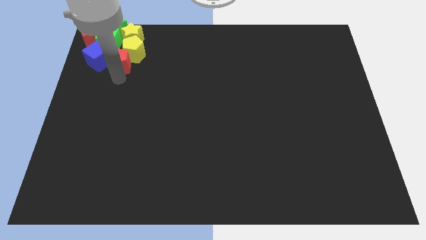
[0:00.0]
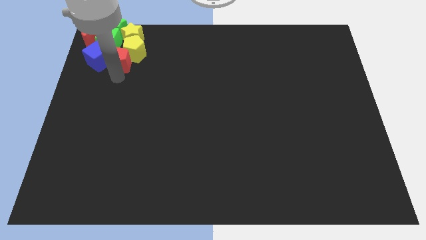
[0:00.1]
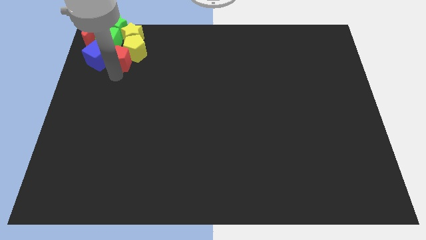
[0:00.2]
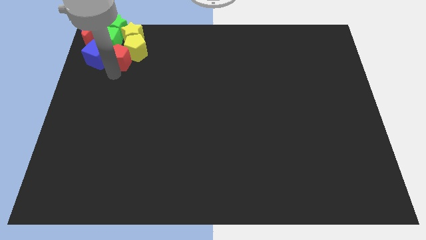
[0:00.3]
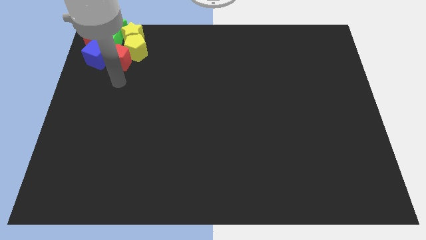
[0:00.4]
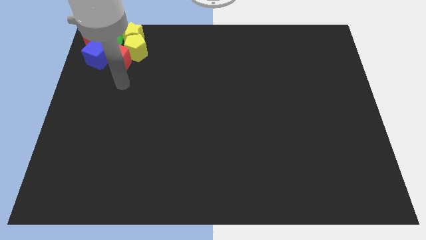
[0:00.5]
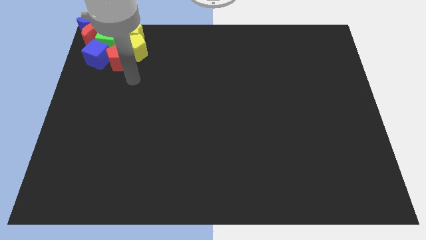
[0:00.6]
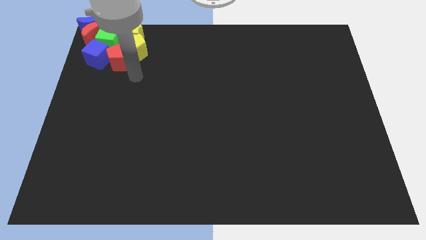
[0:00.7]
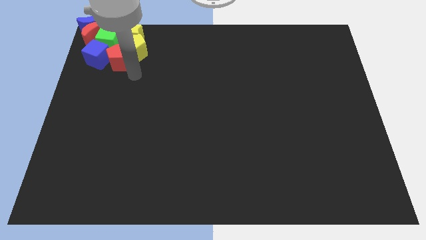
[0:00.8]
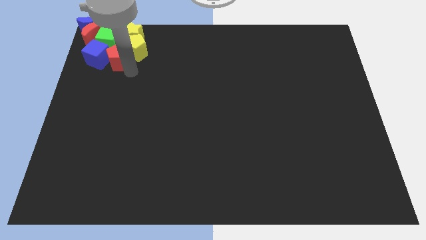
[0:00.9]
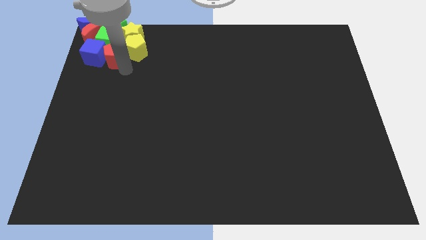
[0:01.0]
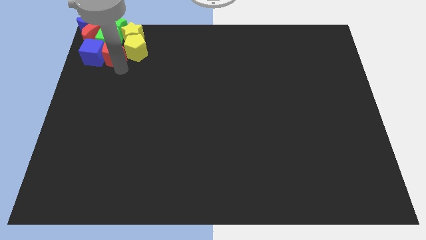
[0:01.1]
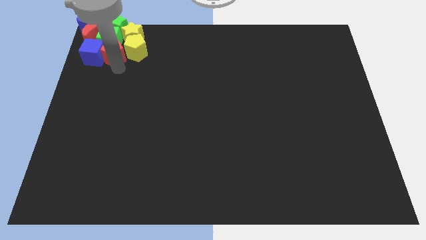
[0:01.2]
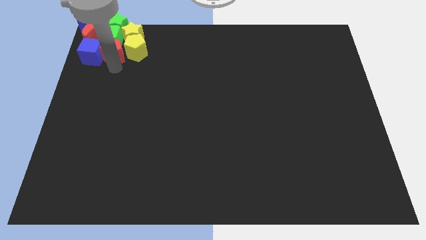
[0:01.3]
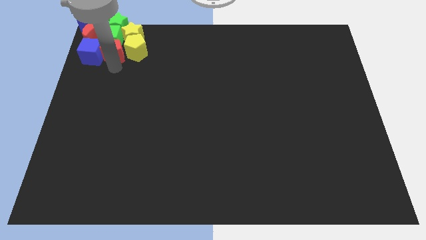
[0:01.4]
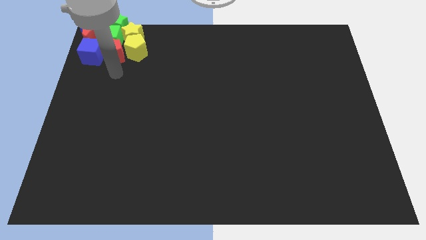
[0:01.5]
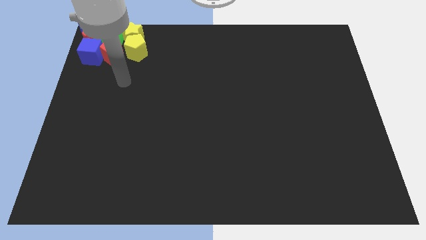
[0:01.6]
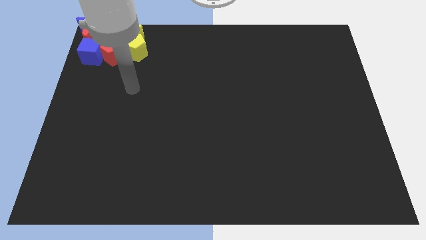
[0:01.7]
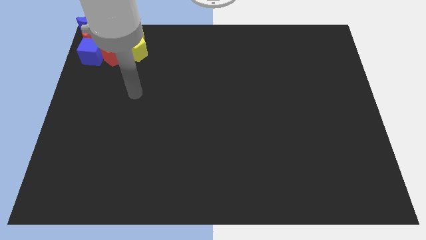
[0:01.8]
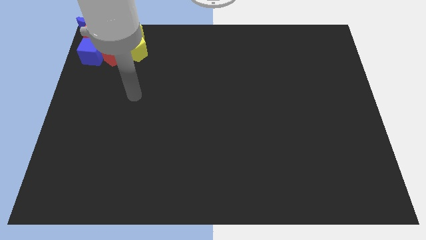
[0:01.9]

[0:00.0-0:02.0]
slide the red pentagon to the bottom of the green cube

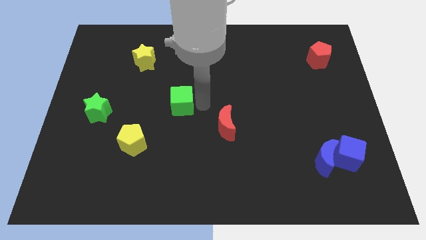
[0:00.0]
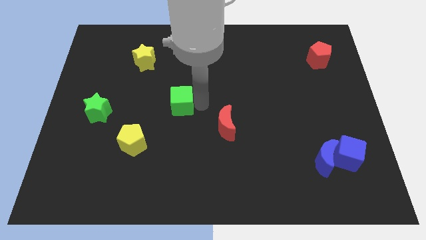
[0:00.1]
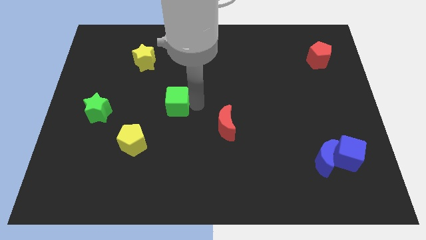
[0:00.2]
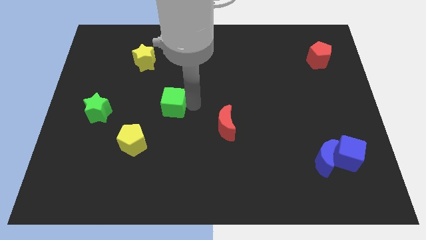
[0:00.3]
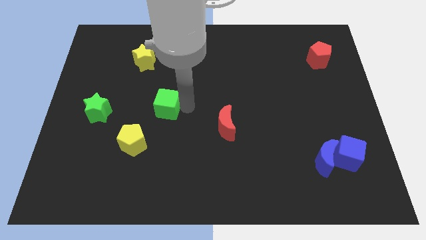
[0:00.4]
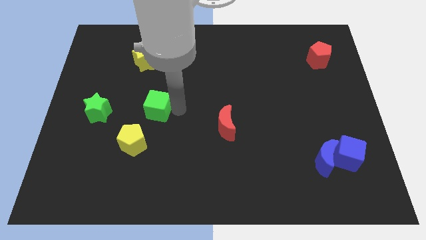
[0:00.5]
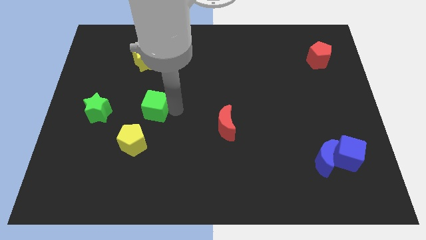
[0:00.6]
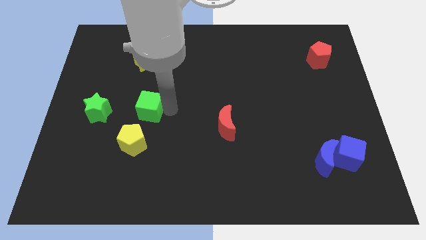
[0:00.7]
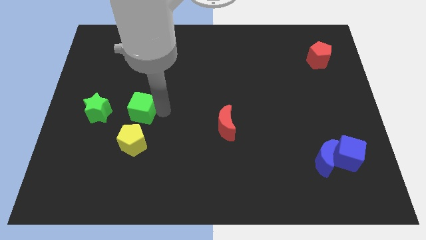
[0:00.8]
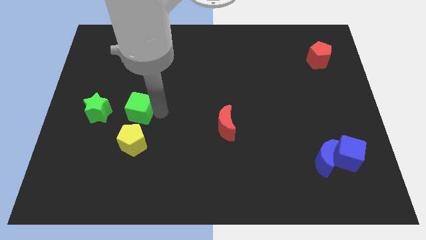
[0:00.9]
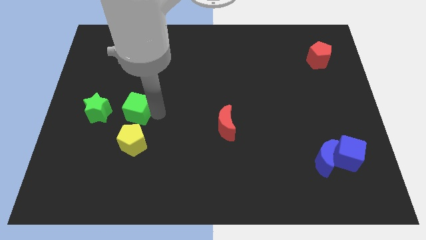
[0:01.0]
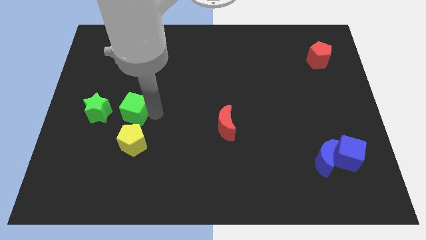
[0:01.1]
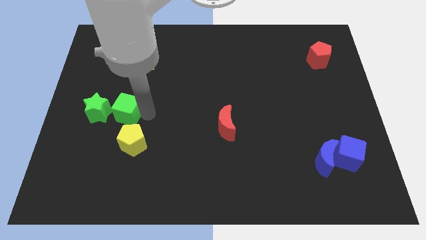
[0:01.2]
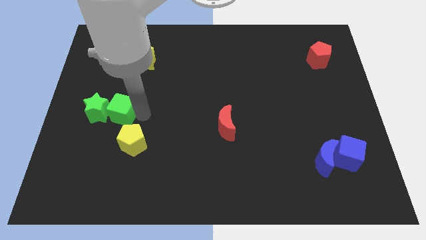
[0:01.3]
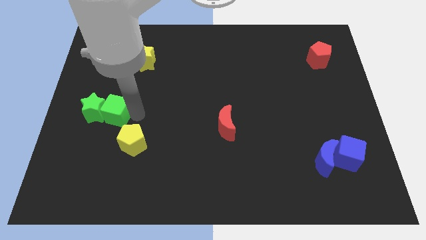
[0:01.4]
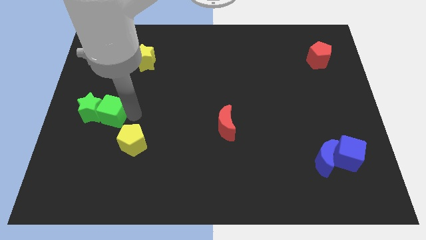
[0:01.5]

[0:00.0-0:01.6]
move the green cube close to the green star

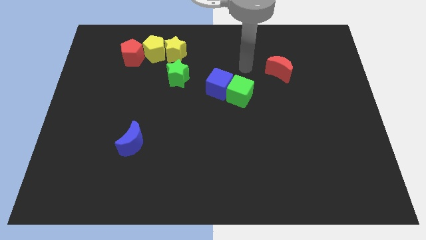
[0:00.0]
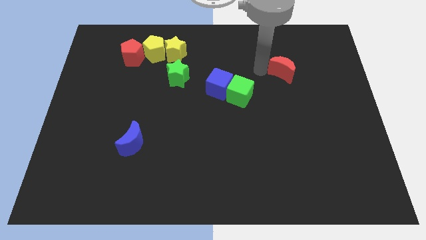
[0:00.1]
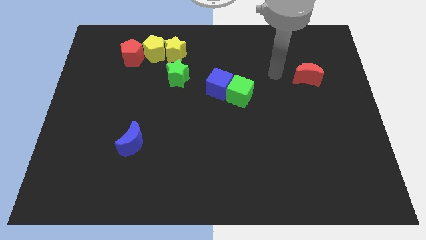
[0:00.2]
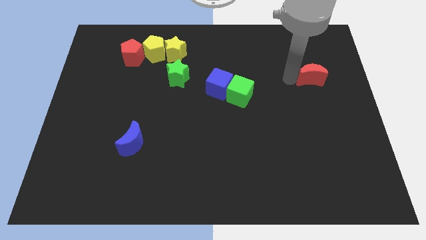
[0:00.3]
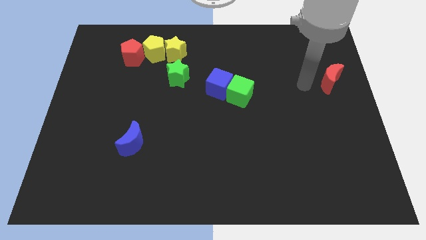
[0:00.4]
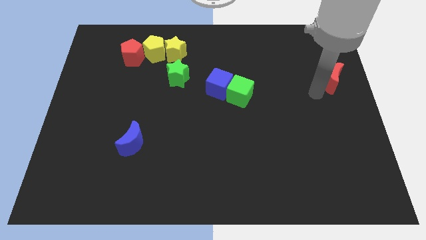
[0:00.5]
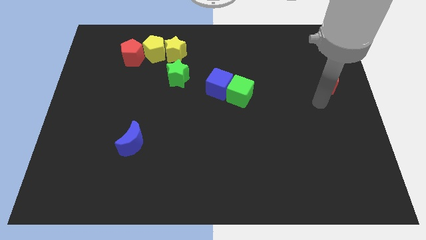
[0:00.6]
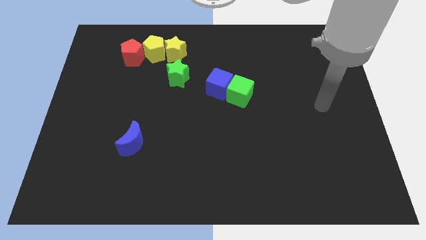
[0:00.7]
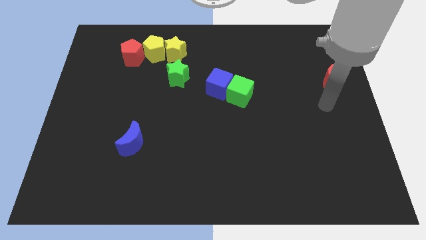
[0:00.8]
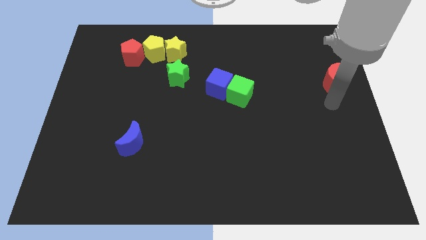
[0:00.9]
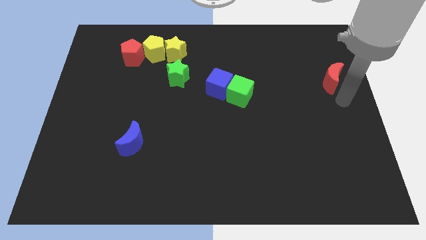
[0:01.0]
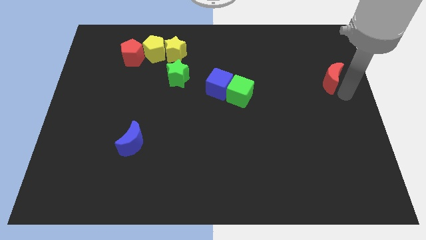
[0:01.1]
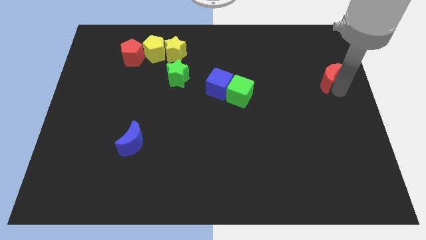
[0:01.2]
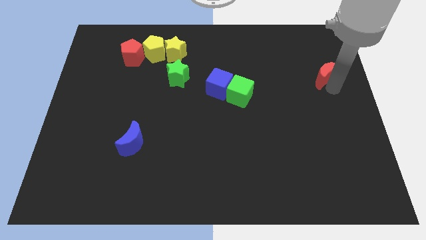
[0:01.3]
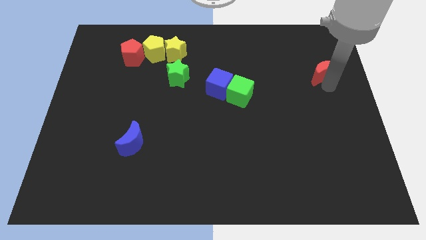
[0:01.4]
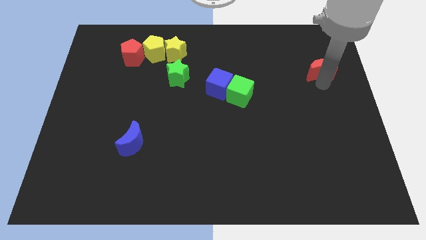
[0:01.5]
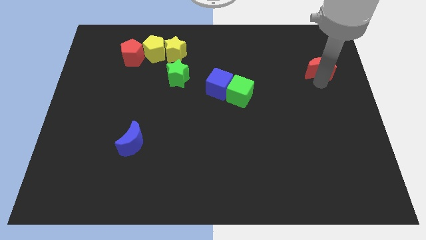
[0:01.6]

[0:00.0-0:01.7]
move the arm towards the red crescent

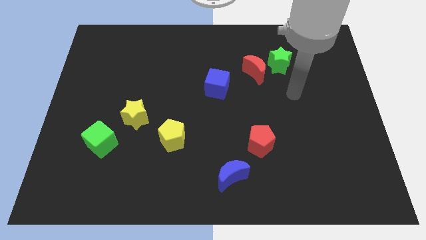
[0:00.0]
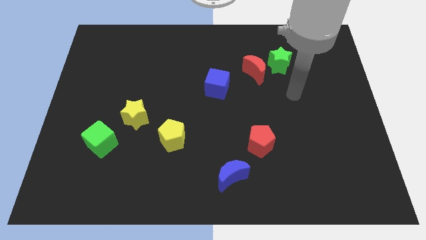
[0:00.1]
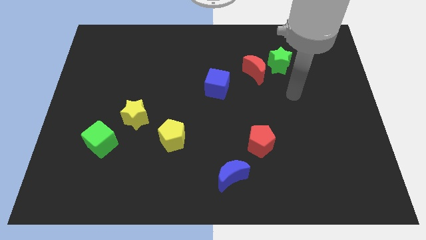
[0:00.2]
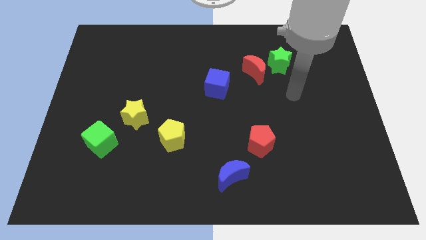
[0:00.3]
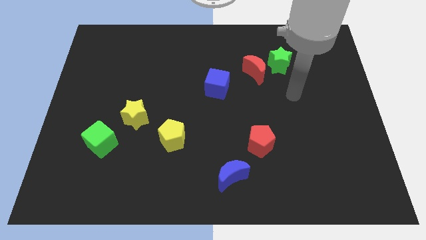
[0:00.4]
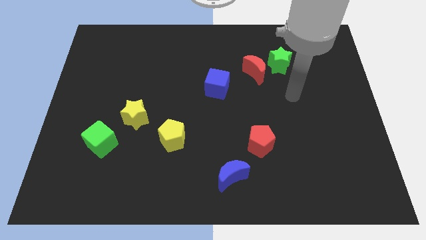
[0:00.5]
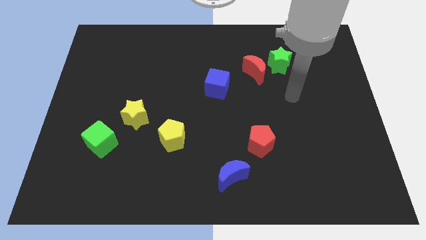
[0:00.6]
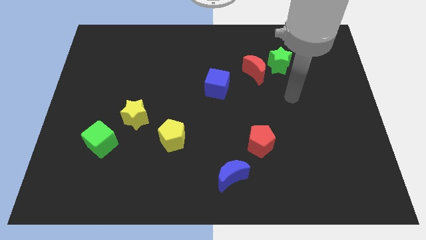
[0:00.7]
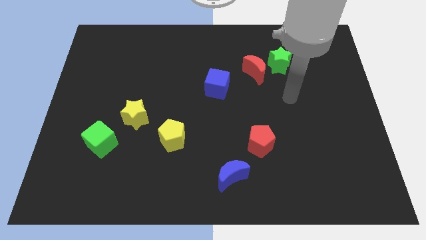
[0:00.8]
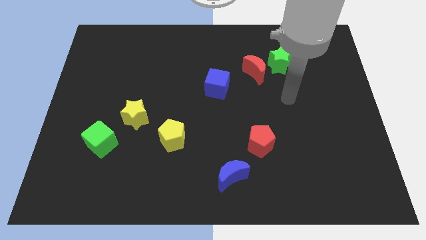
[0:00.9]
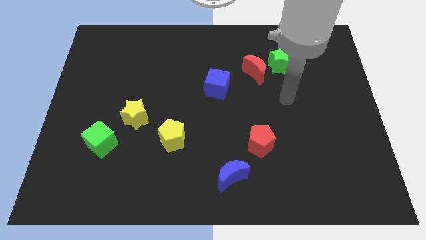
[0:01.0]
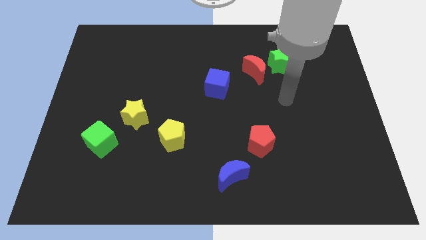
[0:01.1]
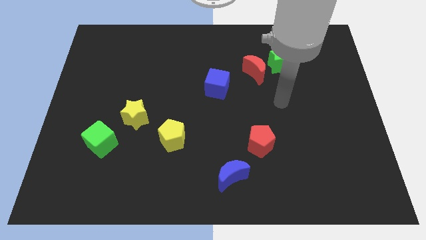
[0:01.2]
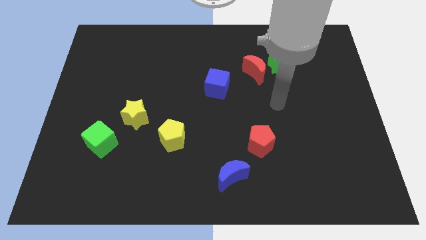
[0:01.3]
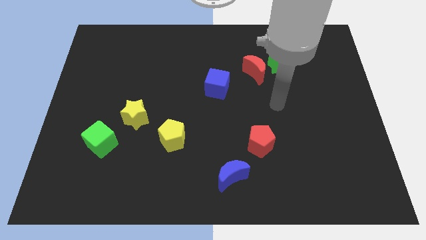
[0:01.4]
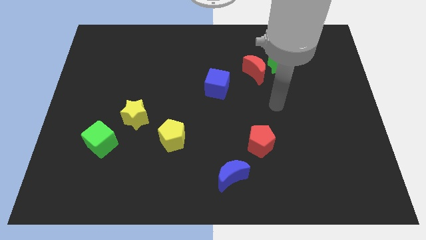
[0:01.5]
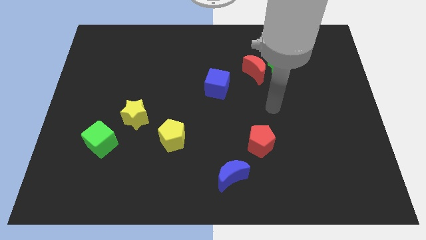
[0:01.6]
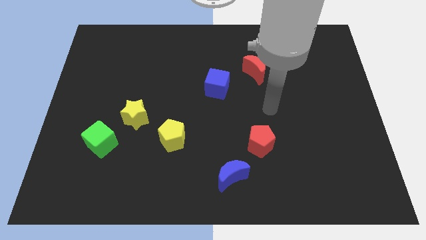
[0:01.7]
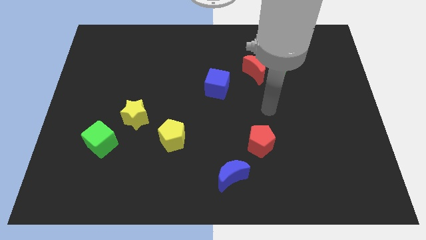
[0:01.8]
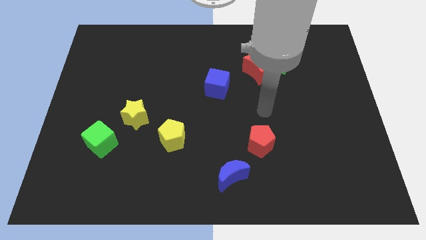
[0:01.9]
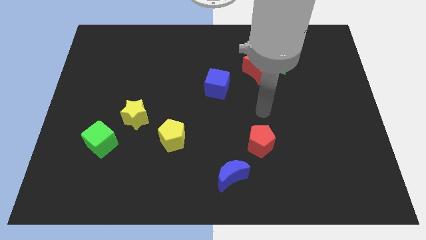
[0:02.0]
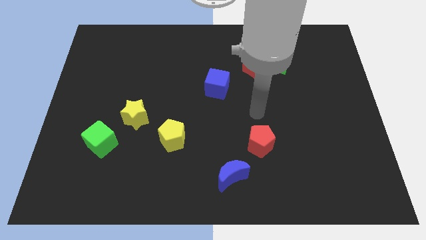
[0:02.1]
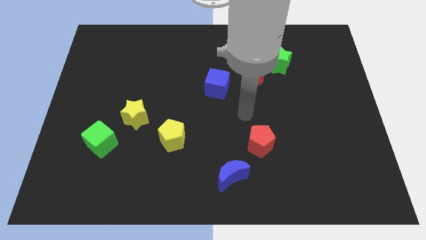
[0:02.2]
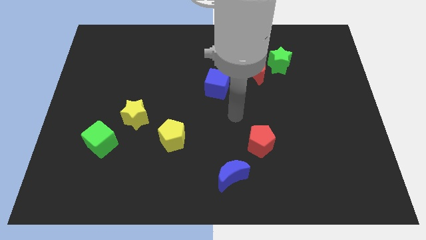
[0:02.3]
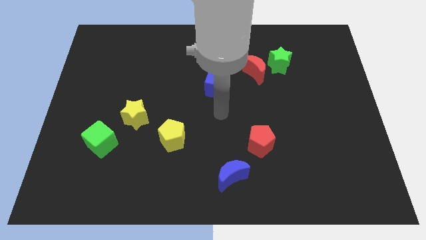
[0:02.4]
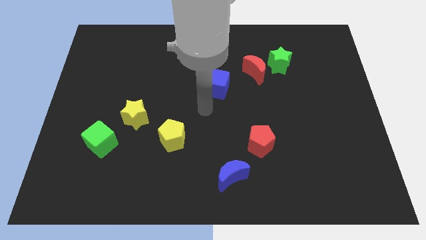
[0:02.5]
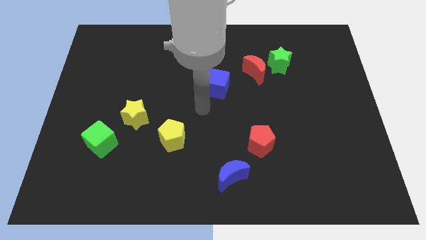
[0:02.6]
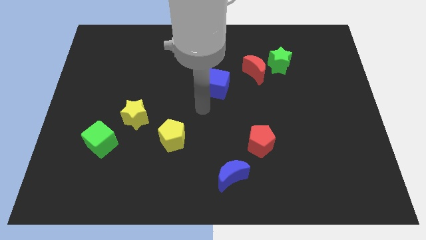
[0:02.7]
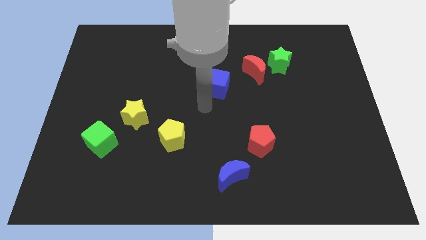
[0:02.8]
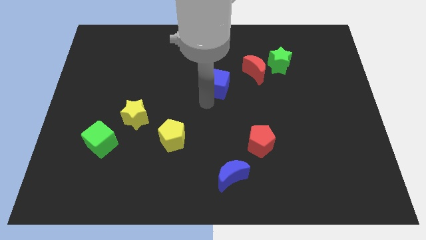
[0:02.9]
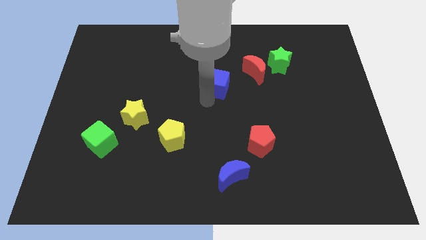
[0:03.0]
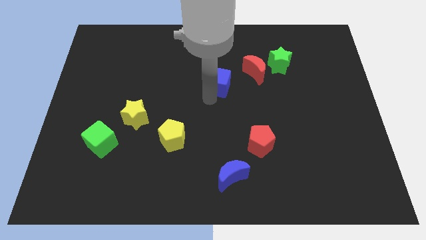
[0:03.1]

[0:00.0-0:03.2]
place the hand at the bottom of the blue cube

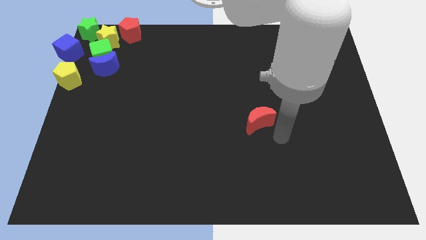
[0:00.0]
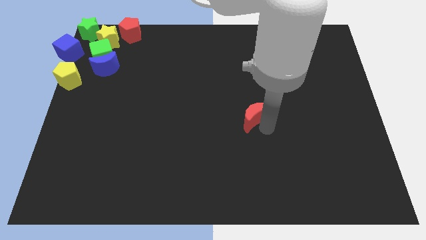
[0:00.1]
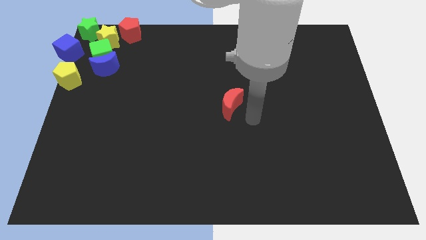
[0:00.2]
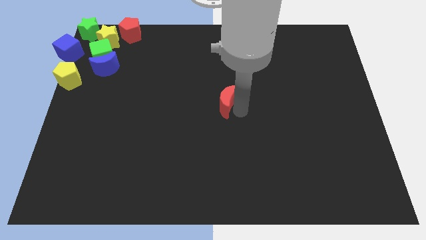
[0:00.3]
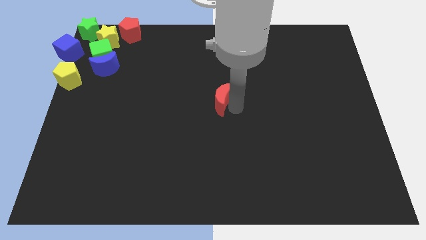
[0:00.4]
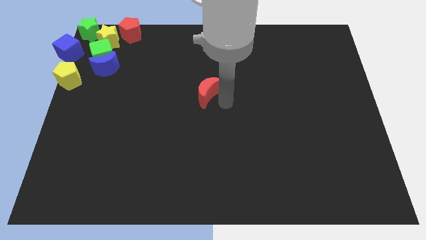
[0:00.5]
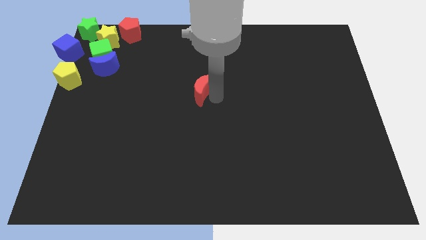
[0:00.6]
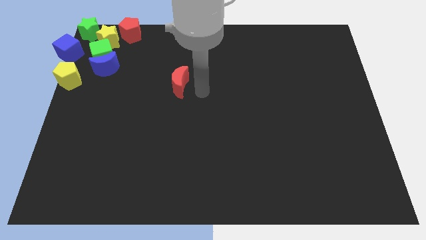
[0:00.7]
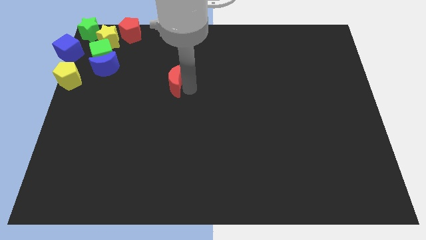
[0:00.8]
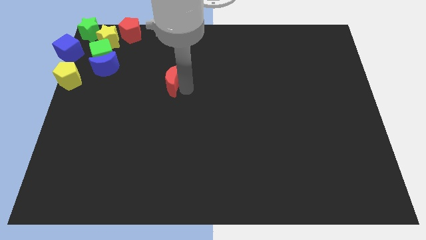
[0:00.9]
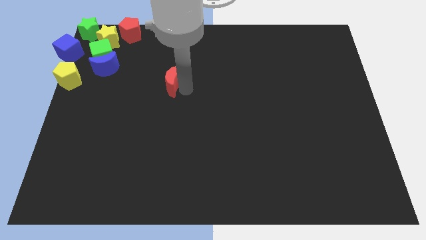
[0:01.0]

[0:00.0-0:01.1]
place the red moon diagonally to blue moon
